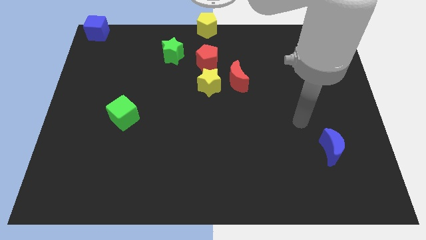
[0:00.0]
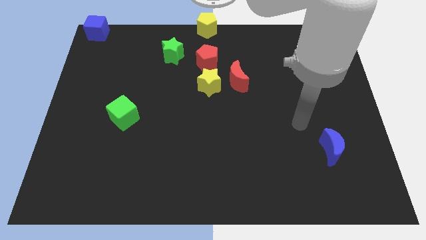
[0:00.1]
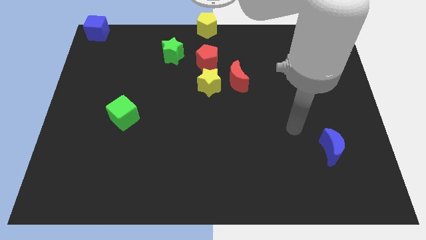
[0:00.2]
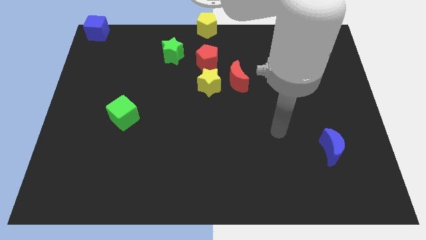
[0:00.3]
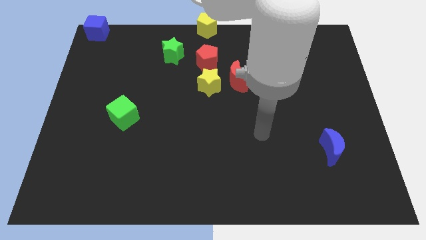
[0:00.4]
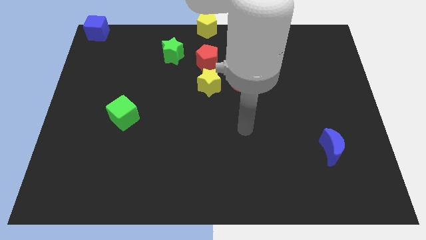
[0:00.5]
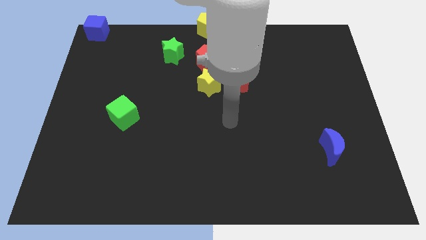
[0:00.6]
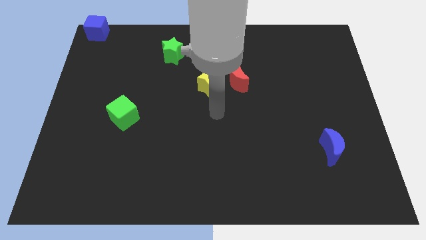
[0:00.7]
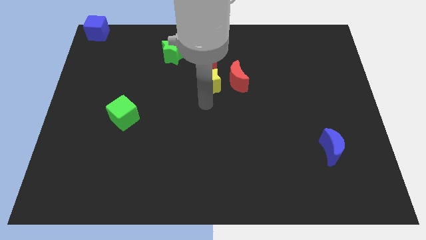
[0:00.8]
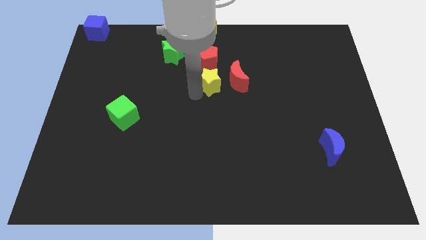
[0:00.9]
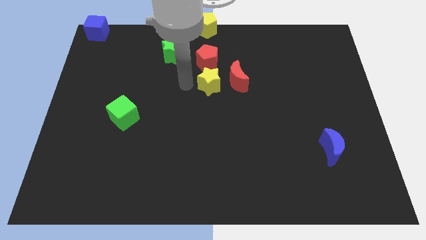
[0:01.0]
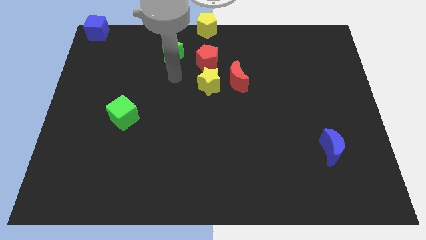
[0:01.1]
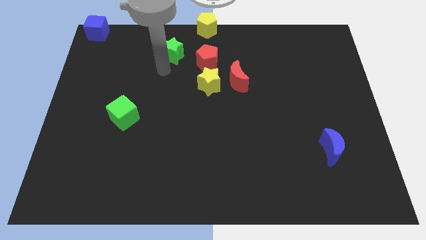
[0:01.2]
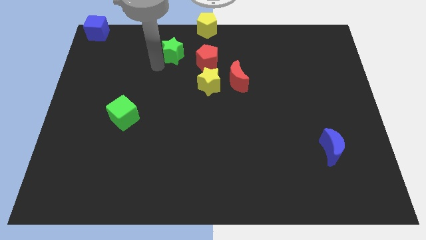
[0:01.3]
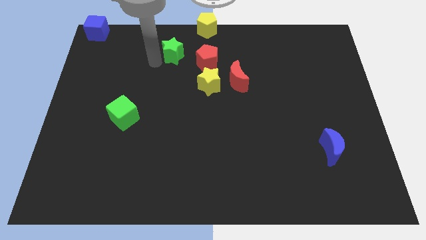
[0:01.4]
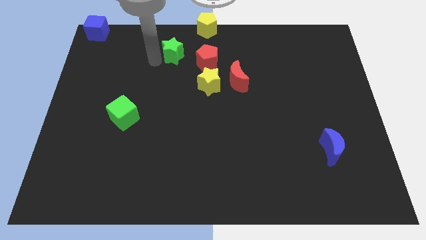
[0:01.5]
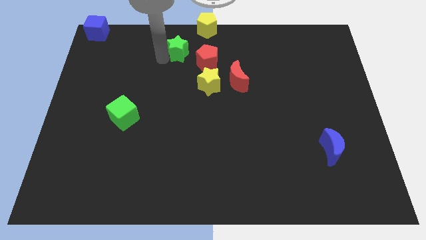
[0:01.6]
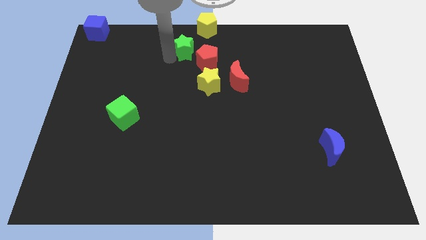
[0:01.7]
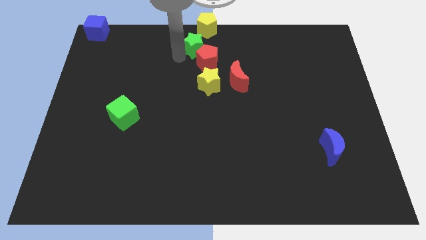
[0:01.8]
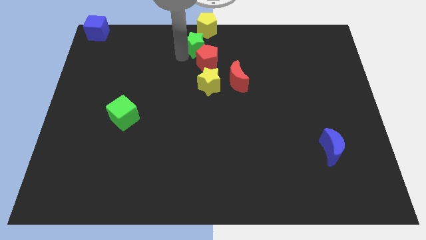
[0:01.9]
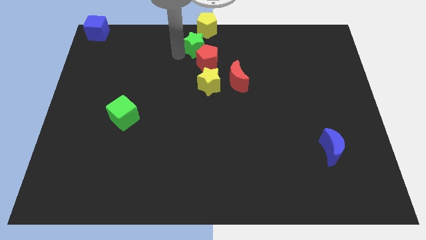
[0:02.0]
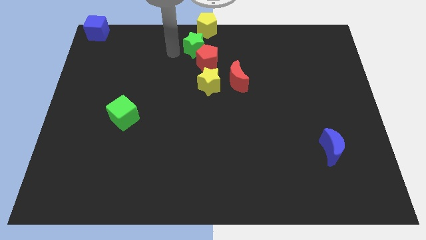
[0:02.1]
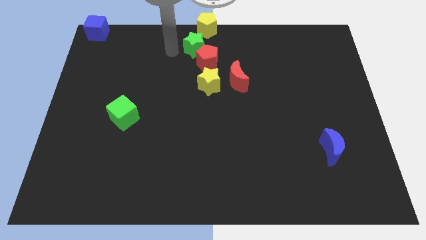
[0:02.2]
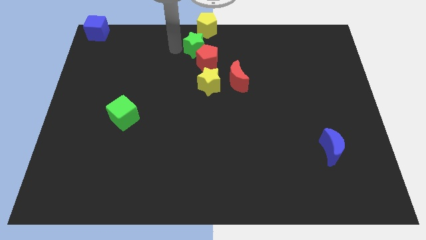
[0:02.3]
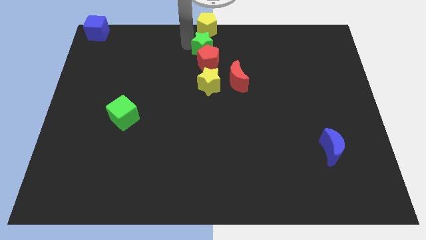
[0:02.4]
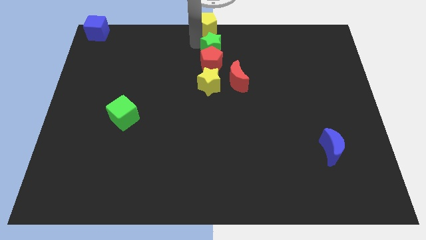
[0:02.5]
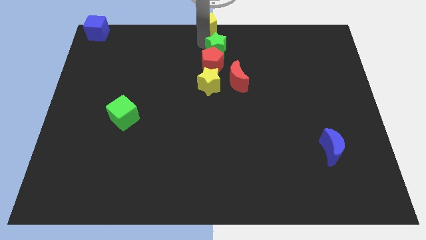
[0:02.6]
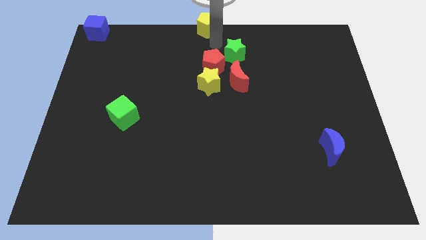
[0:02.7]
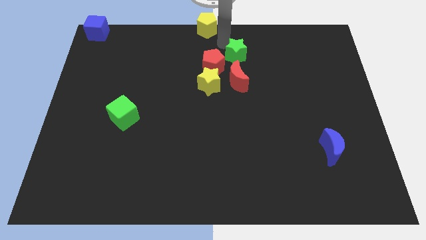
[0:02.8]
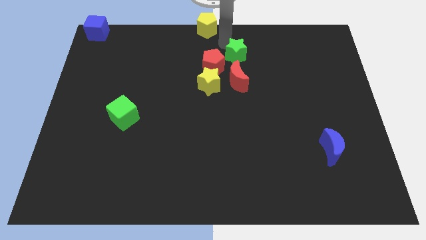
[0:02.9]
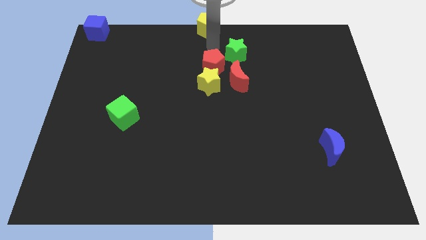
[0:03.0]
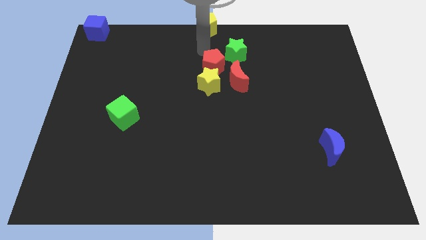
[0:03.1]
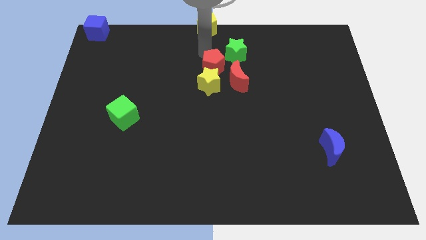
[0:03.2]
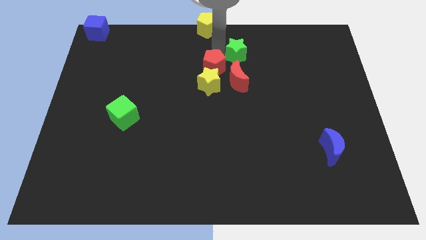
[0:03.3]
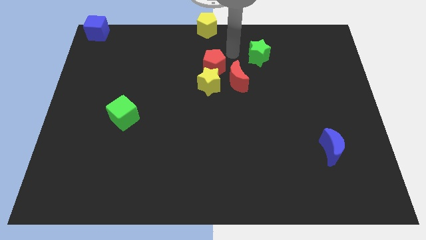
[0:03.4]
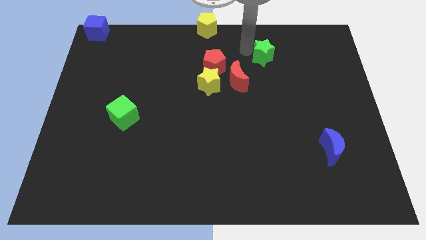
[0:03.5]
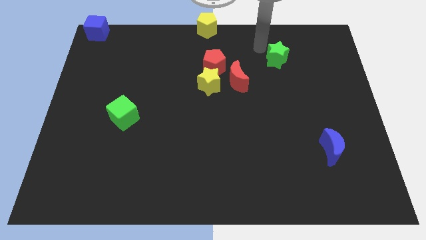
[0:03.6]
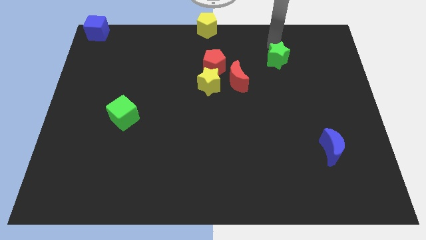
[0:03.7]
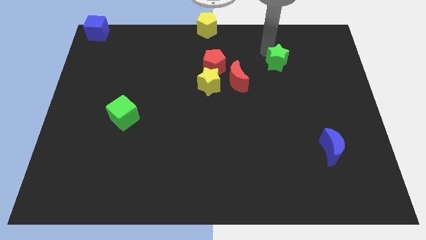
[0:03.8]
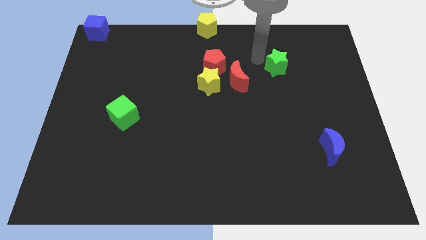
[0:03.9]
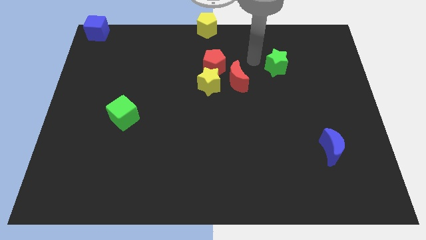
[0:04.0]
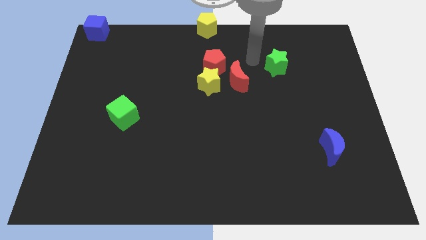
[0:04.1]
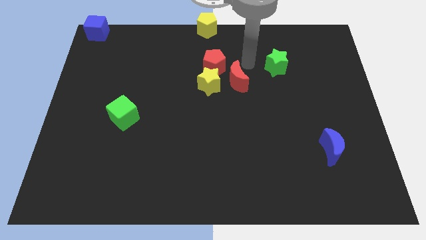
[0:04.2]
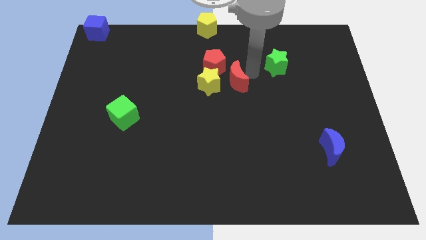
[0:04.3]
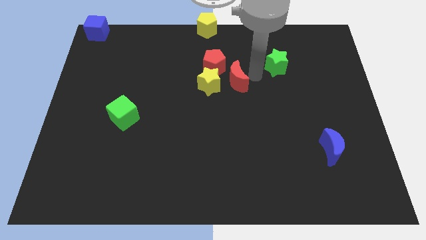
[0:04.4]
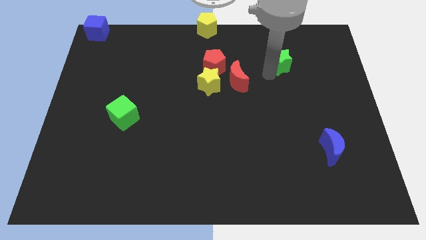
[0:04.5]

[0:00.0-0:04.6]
place the green star to the right of the red crescent

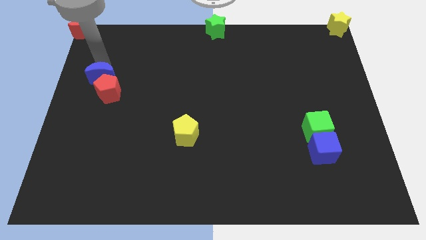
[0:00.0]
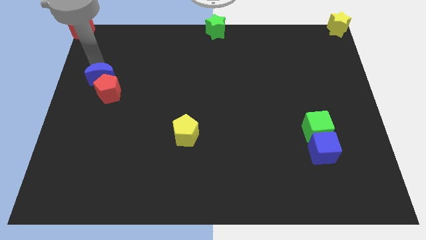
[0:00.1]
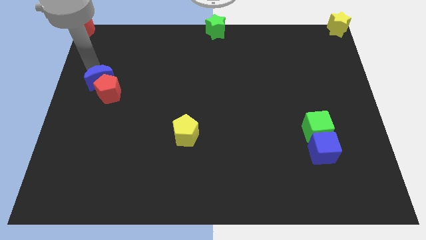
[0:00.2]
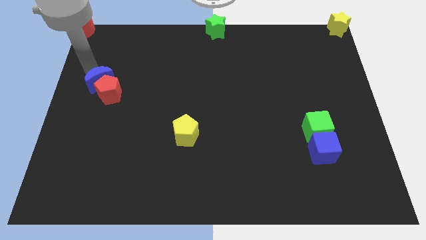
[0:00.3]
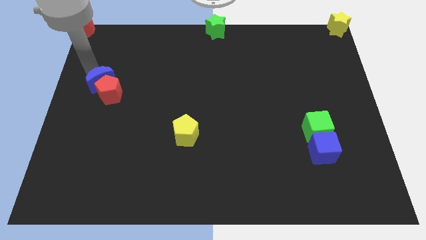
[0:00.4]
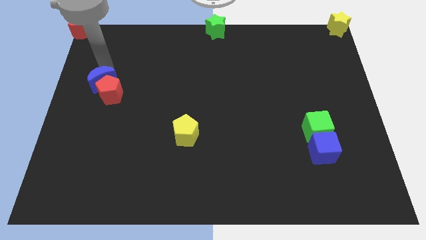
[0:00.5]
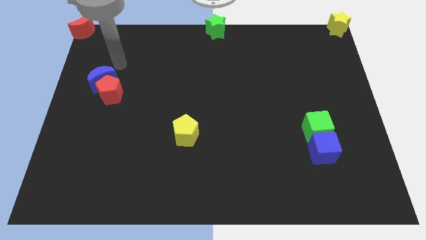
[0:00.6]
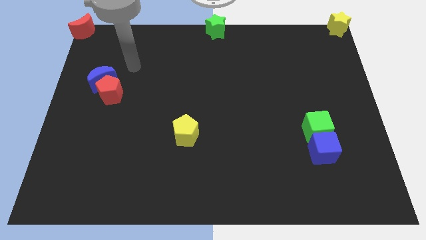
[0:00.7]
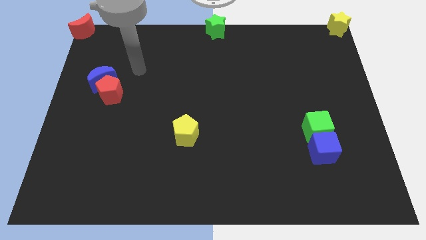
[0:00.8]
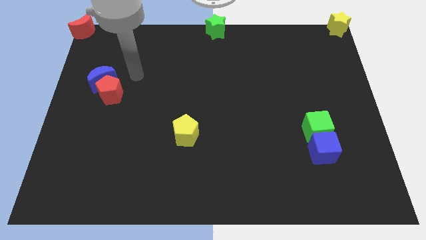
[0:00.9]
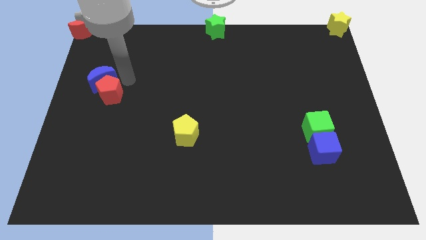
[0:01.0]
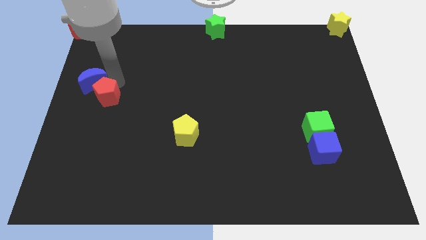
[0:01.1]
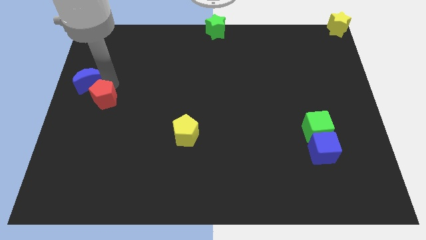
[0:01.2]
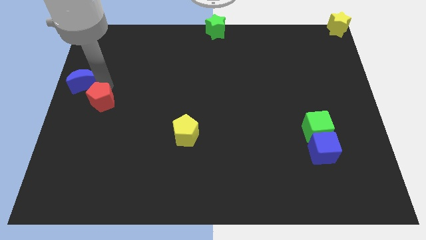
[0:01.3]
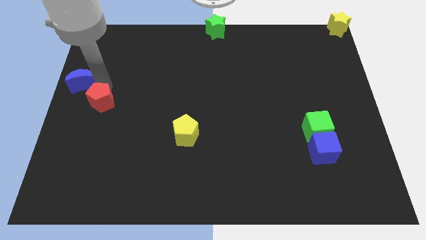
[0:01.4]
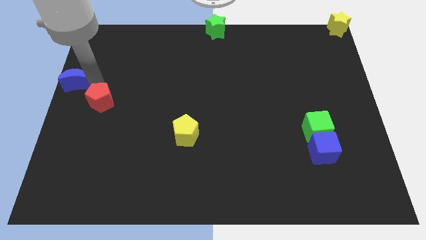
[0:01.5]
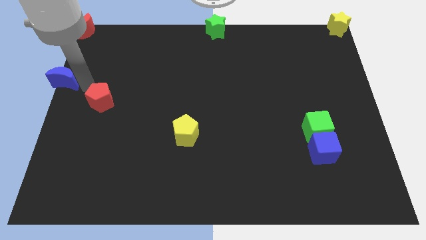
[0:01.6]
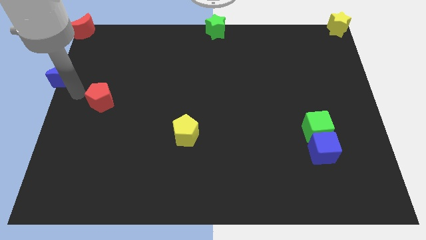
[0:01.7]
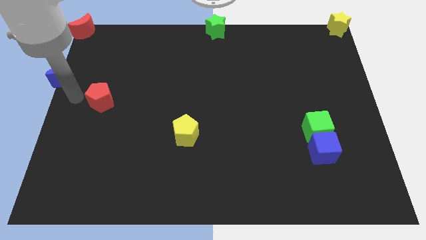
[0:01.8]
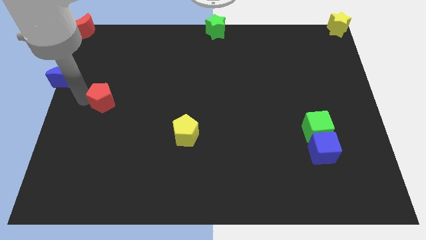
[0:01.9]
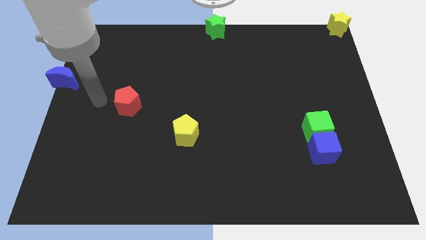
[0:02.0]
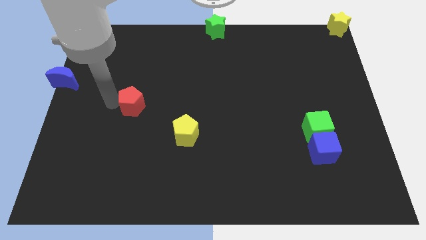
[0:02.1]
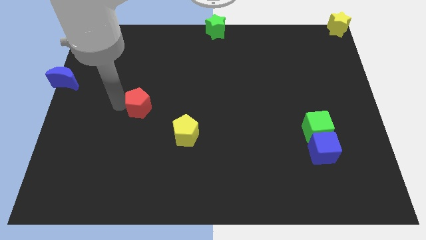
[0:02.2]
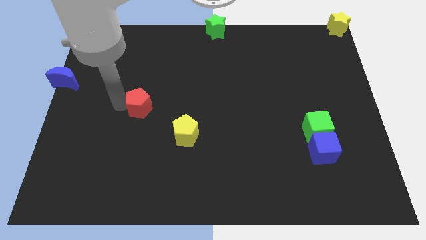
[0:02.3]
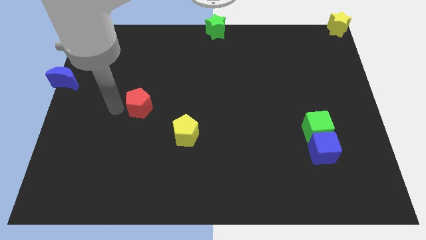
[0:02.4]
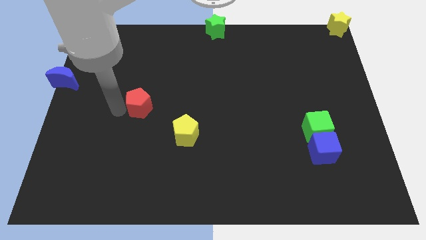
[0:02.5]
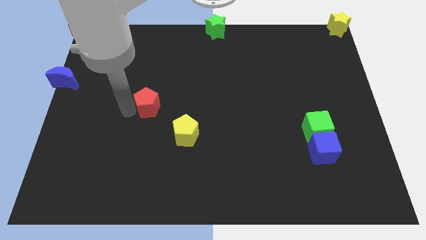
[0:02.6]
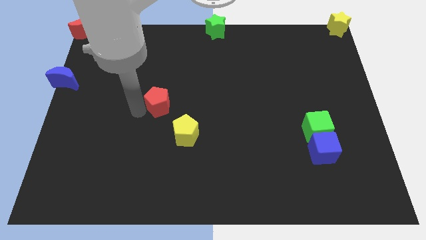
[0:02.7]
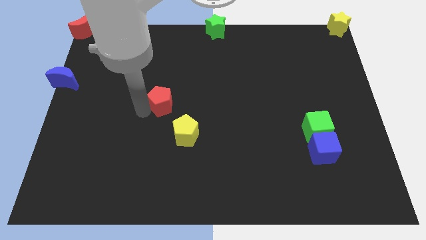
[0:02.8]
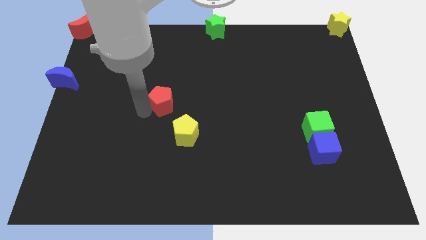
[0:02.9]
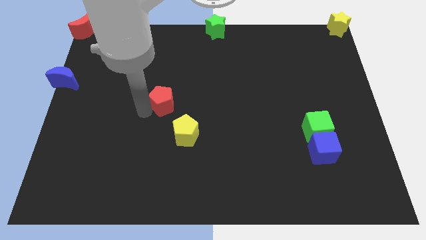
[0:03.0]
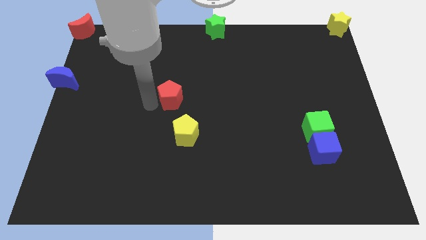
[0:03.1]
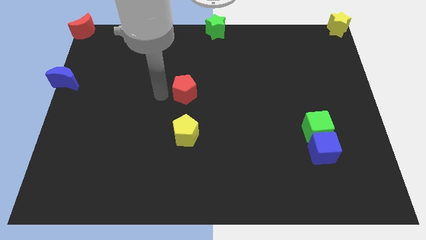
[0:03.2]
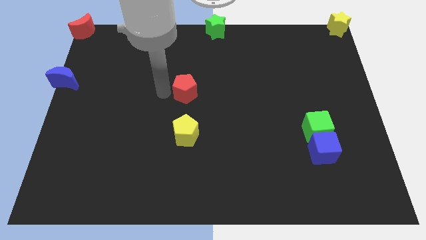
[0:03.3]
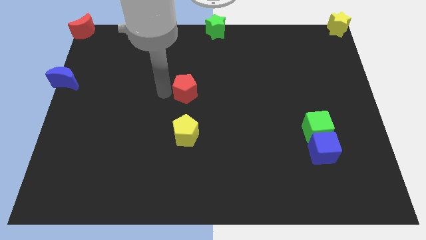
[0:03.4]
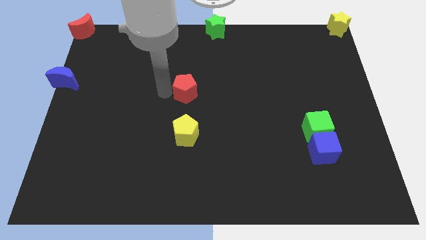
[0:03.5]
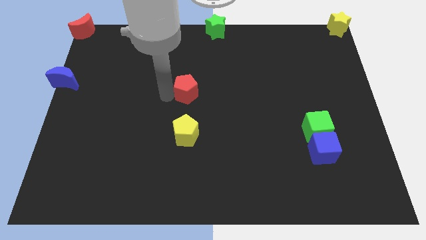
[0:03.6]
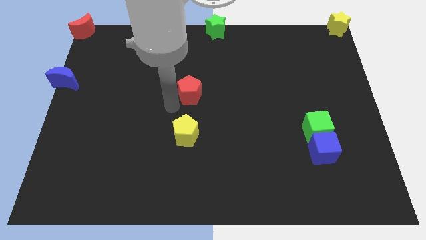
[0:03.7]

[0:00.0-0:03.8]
separate the red pentagon from the blue moon

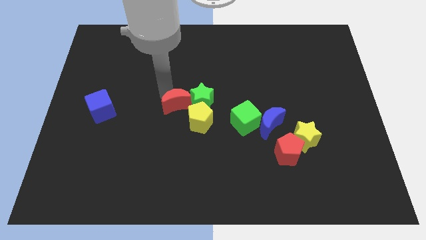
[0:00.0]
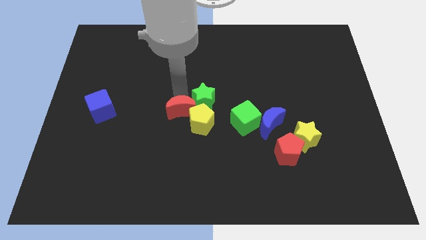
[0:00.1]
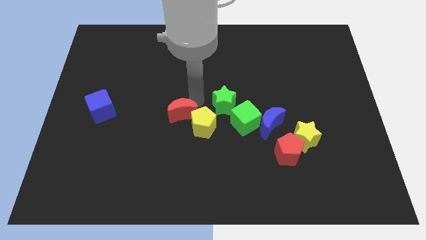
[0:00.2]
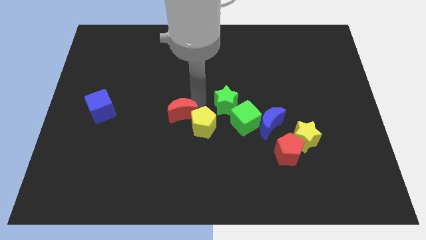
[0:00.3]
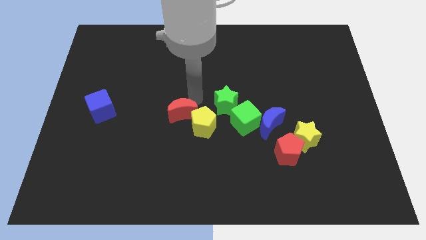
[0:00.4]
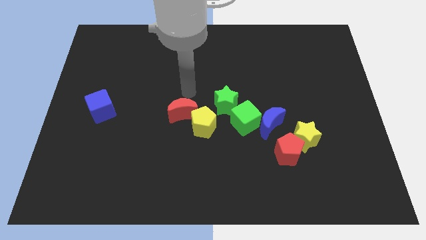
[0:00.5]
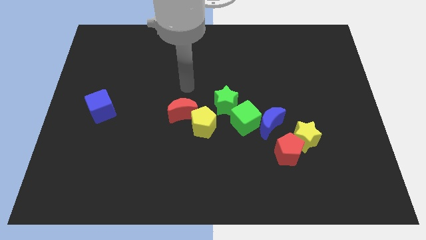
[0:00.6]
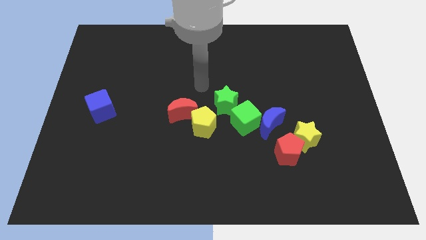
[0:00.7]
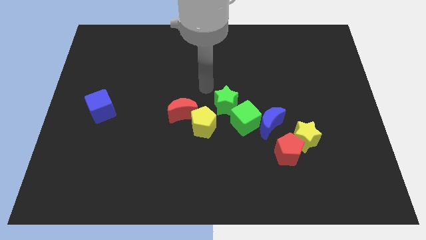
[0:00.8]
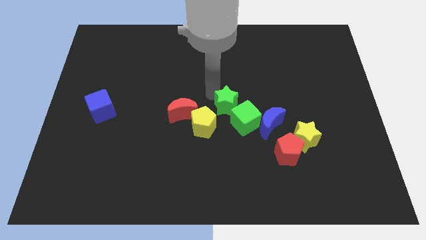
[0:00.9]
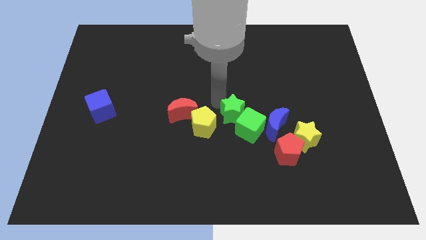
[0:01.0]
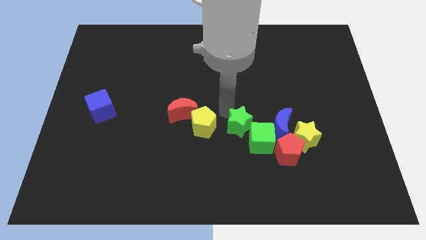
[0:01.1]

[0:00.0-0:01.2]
push the green star into the green cube
